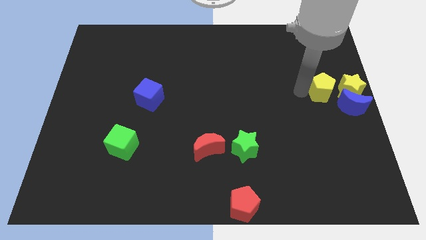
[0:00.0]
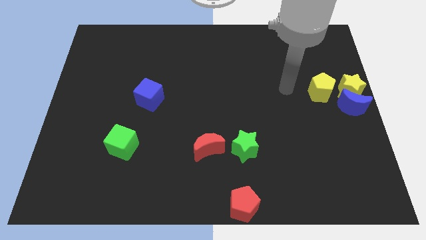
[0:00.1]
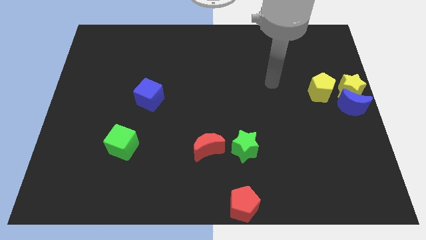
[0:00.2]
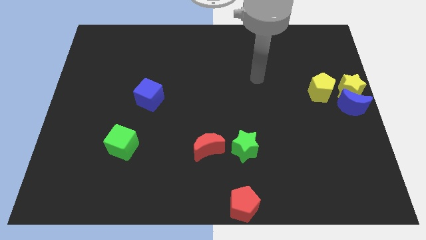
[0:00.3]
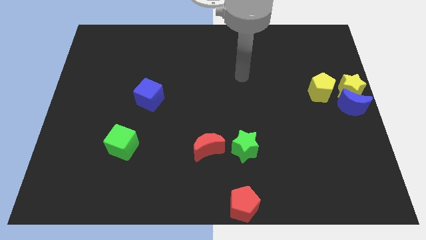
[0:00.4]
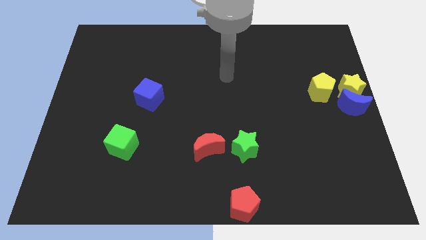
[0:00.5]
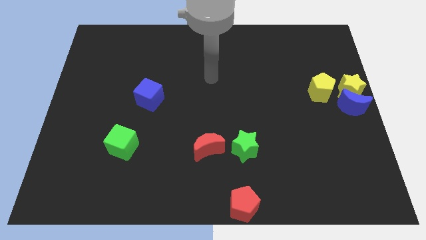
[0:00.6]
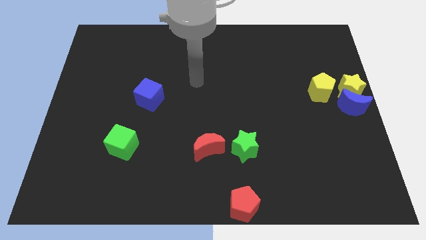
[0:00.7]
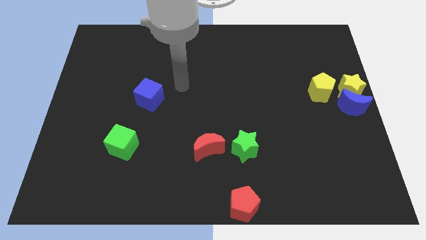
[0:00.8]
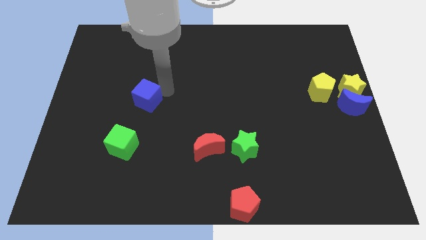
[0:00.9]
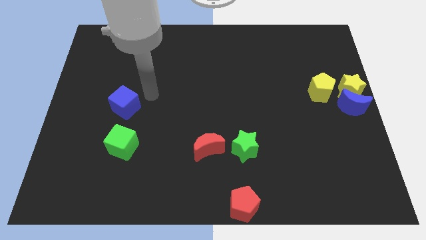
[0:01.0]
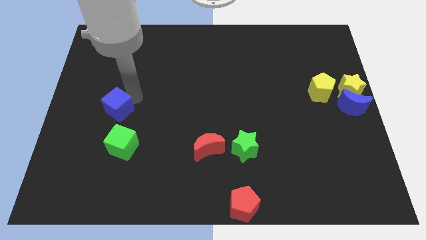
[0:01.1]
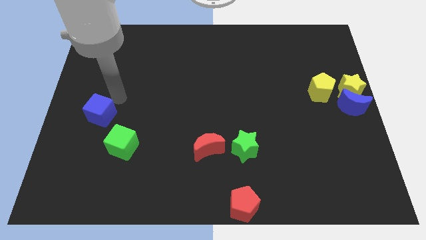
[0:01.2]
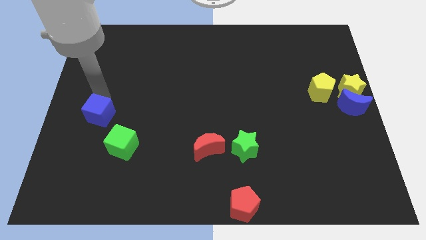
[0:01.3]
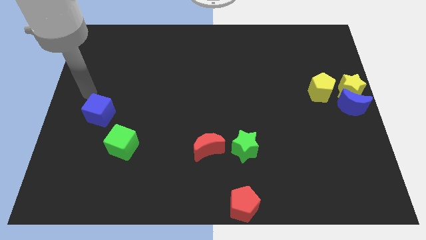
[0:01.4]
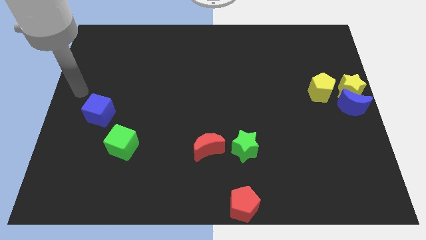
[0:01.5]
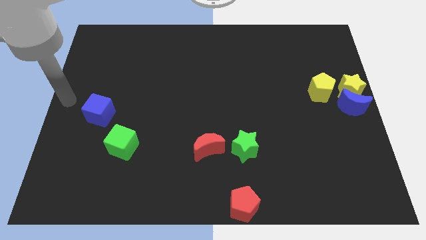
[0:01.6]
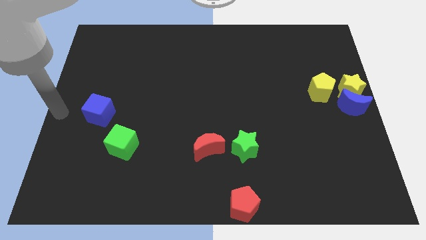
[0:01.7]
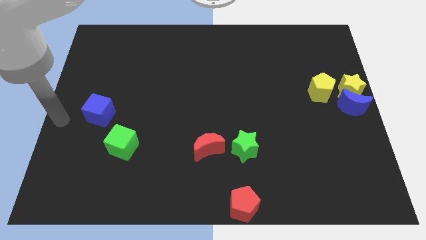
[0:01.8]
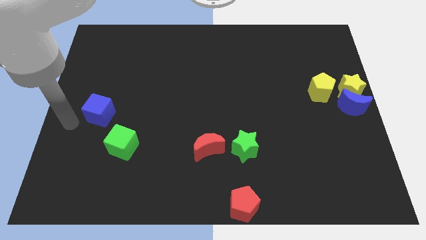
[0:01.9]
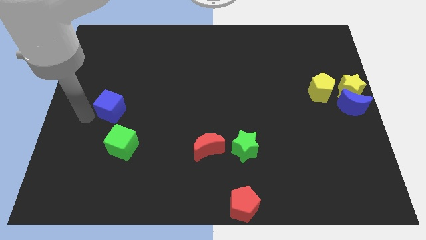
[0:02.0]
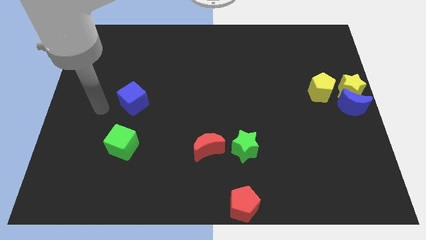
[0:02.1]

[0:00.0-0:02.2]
push the blue cube to the top of the green cube

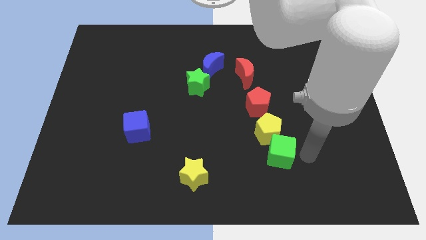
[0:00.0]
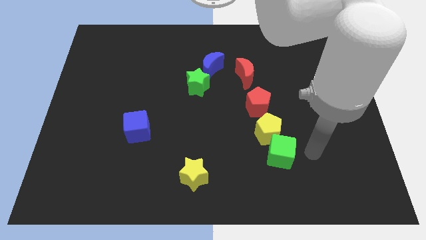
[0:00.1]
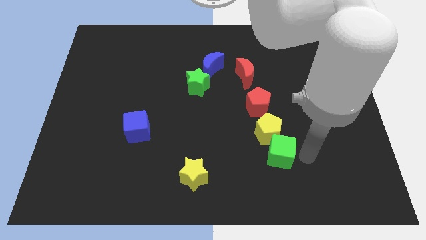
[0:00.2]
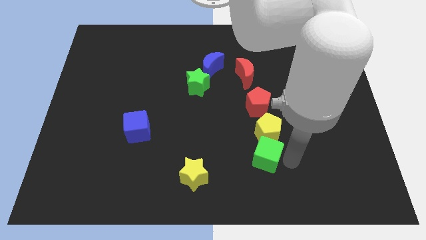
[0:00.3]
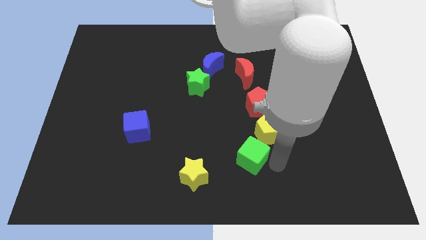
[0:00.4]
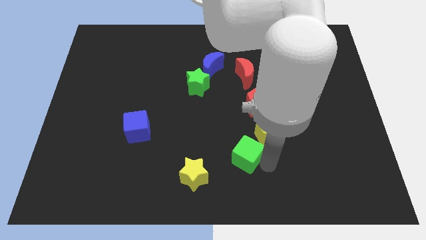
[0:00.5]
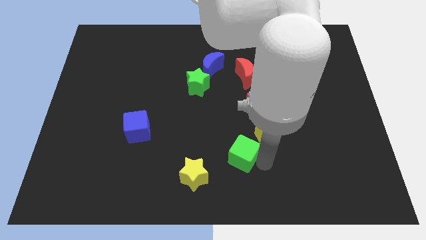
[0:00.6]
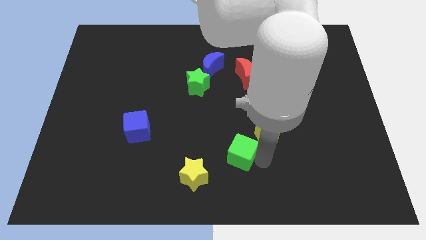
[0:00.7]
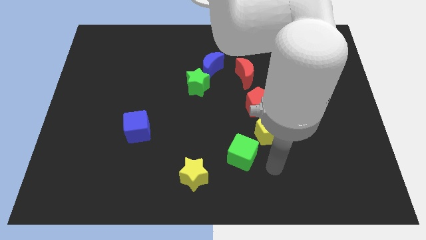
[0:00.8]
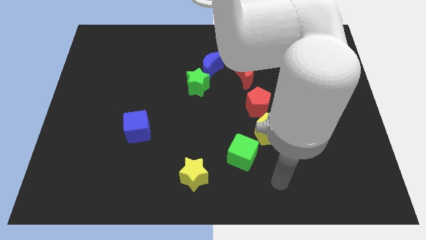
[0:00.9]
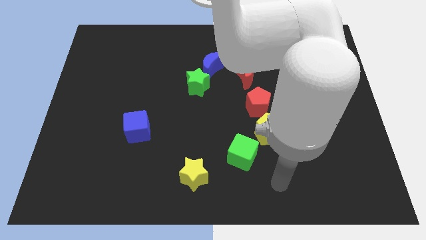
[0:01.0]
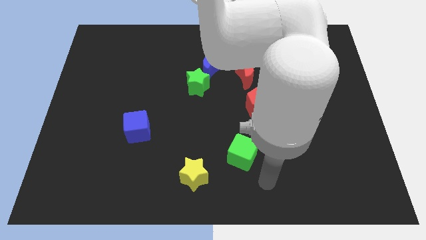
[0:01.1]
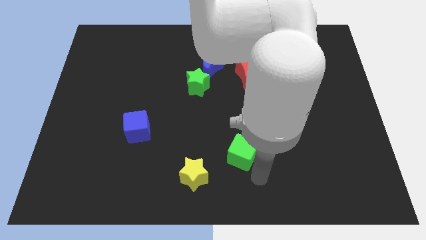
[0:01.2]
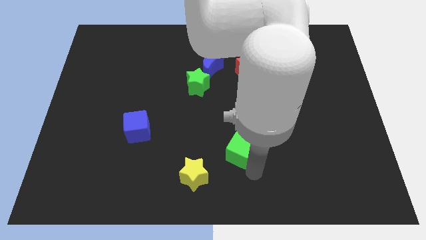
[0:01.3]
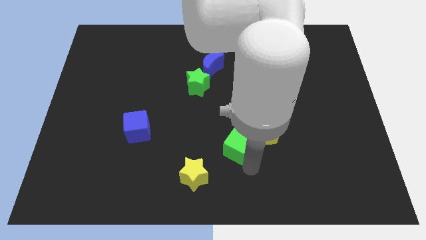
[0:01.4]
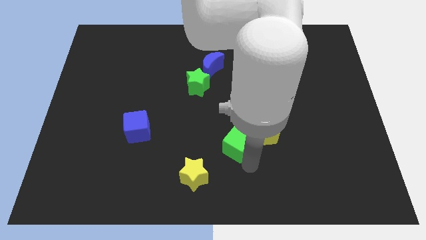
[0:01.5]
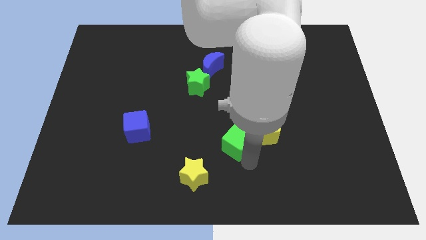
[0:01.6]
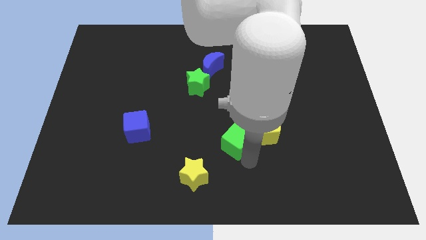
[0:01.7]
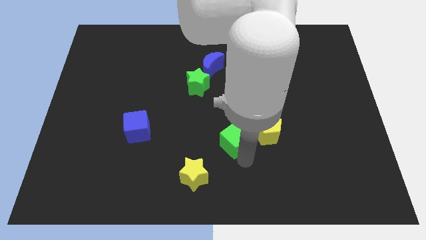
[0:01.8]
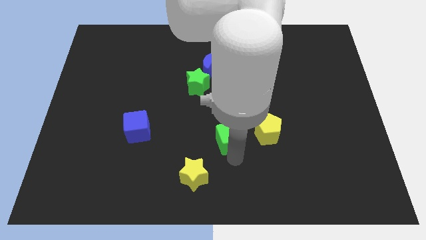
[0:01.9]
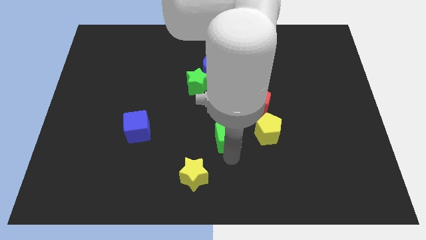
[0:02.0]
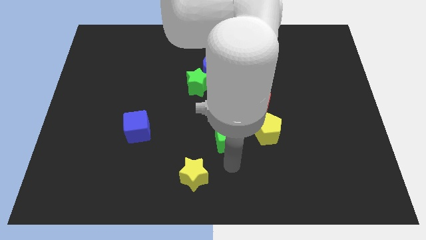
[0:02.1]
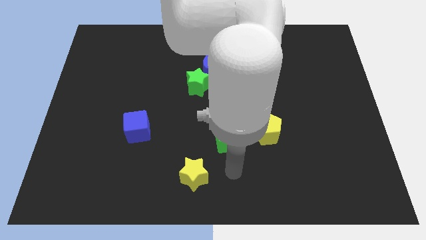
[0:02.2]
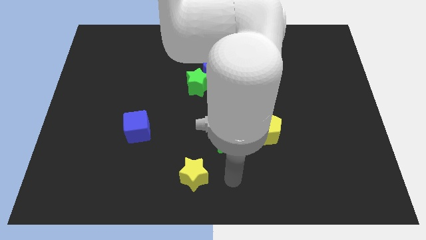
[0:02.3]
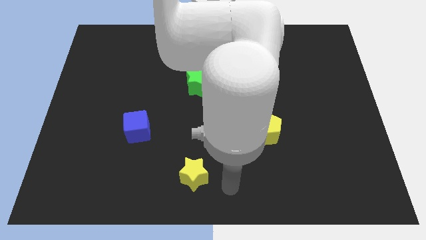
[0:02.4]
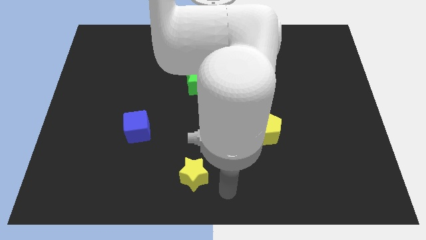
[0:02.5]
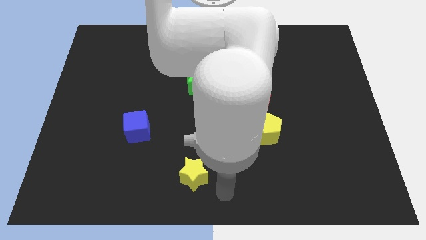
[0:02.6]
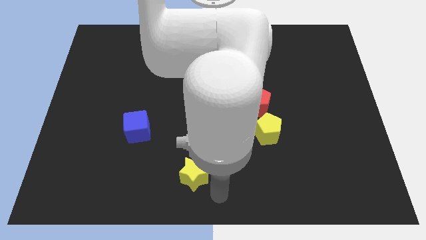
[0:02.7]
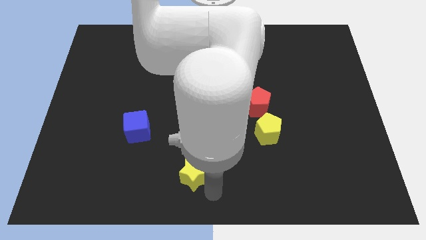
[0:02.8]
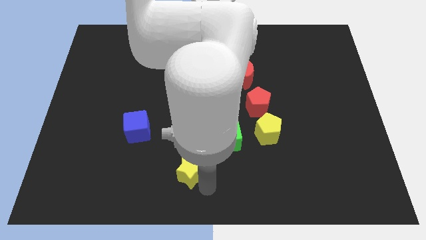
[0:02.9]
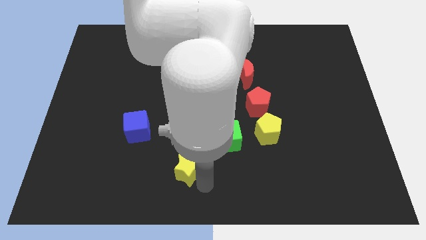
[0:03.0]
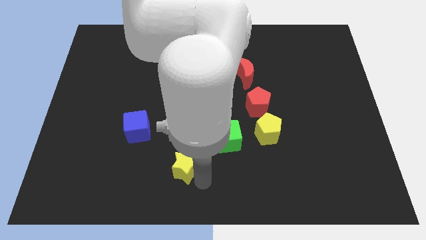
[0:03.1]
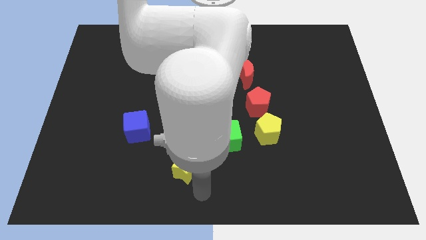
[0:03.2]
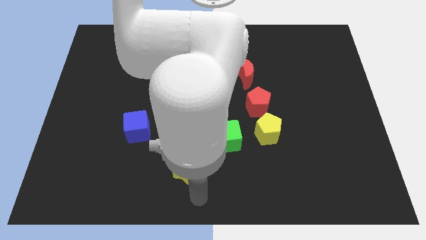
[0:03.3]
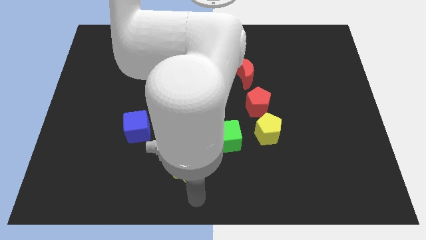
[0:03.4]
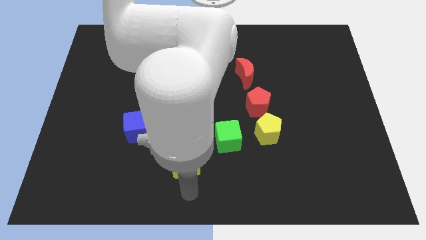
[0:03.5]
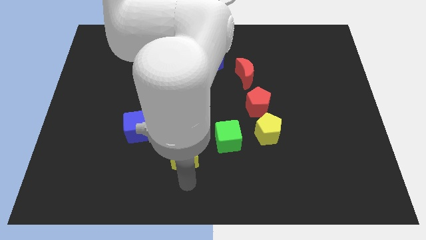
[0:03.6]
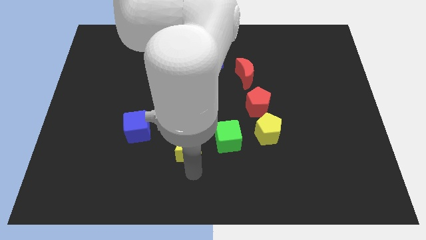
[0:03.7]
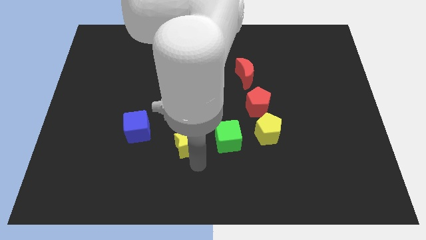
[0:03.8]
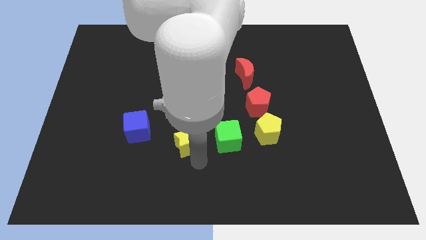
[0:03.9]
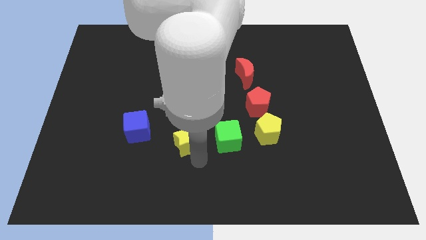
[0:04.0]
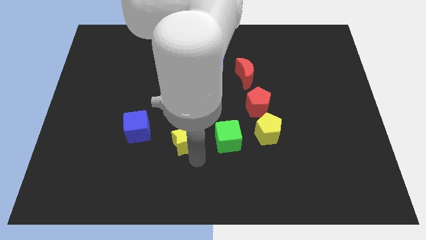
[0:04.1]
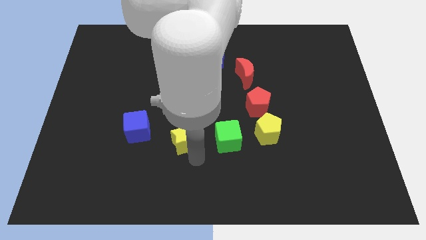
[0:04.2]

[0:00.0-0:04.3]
arrange the green cube and yellow star in a horizontal line at the left side of the yellow pentagon

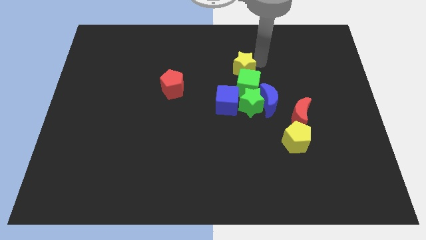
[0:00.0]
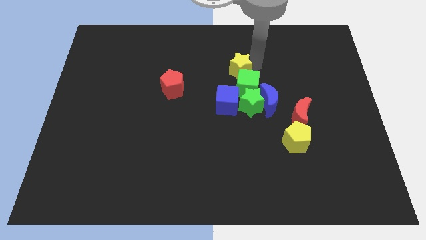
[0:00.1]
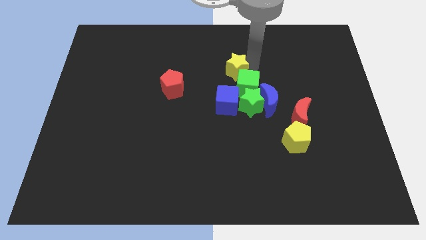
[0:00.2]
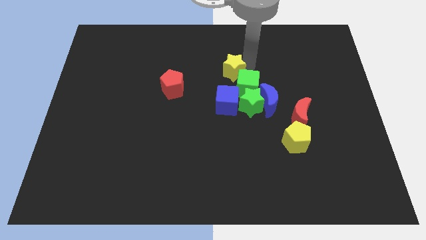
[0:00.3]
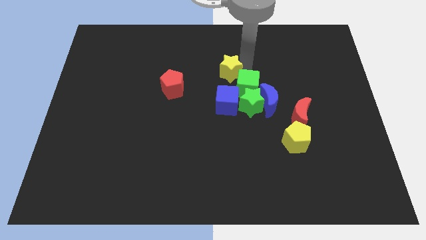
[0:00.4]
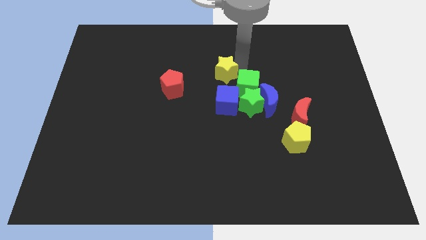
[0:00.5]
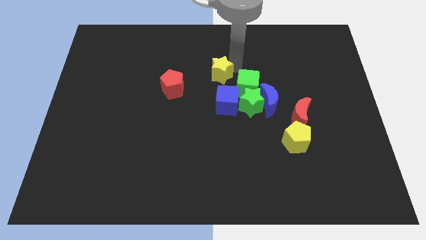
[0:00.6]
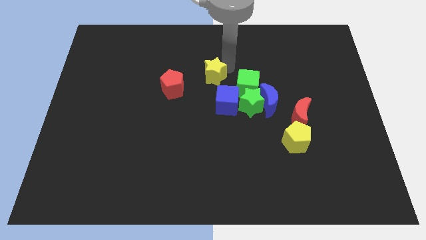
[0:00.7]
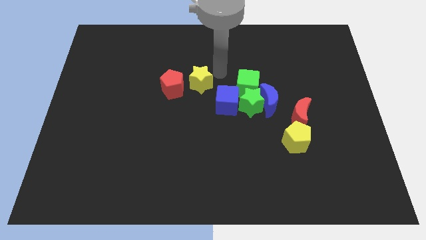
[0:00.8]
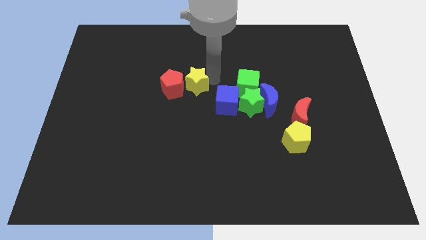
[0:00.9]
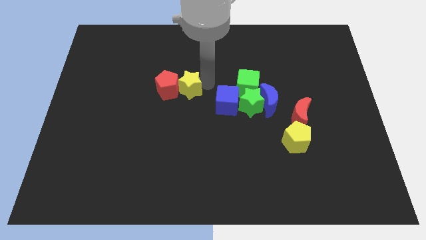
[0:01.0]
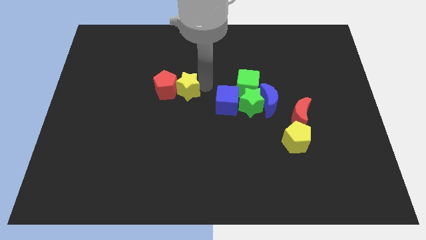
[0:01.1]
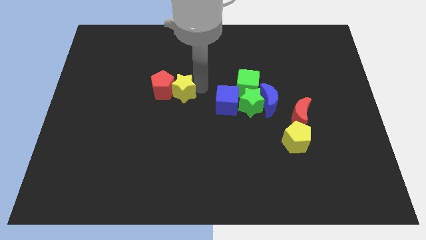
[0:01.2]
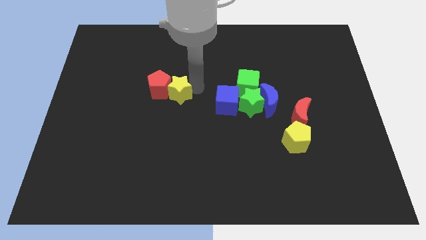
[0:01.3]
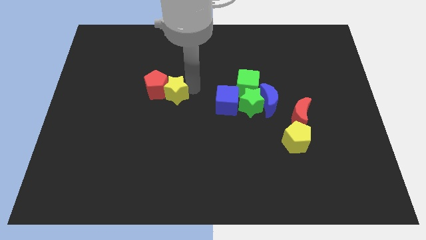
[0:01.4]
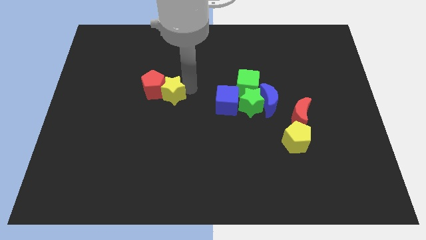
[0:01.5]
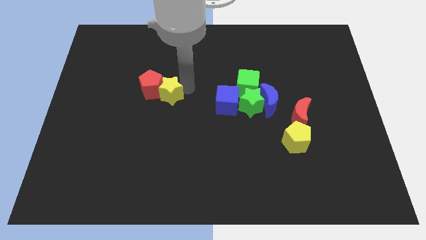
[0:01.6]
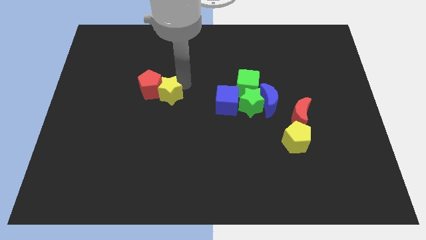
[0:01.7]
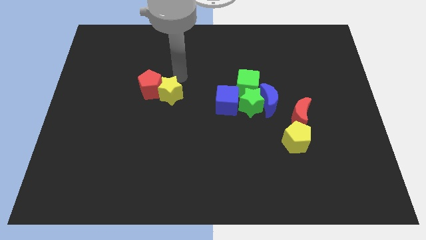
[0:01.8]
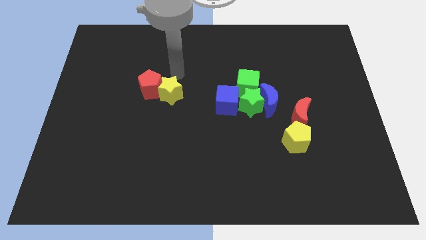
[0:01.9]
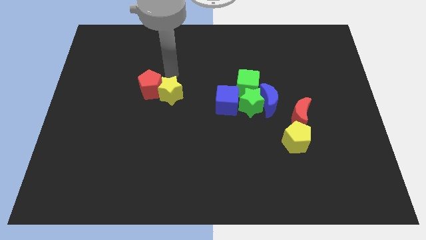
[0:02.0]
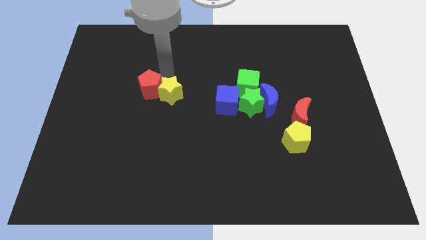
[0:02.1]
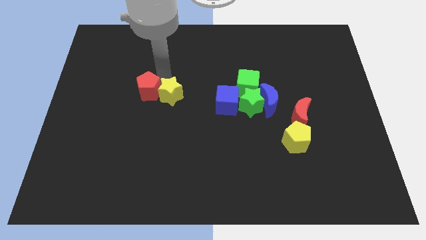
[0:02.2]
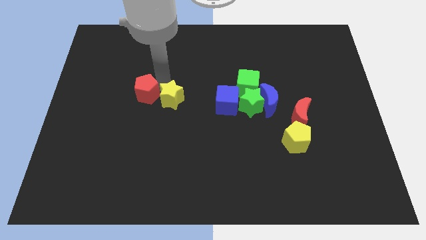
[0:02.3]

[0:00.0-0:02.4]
move the yellow star to the right of the red pentagon
